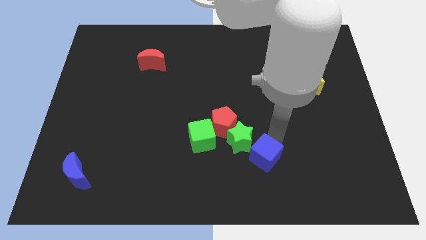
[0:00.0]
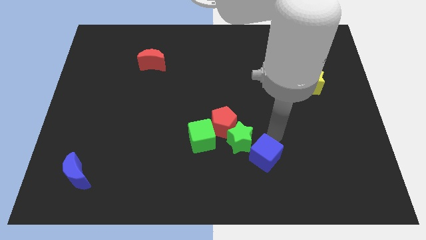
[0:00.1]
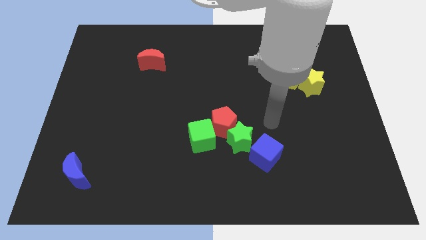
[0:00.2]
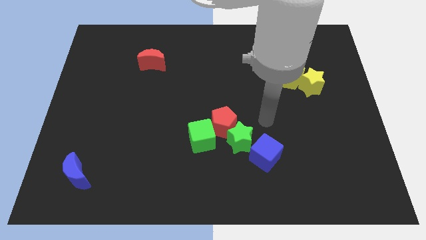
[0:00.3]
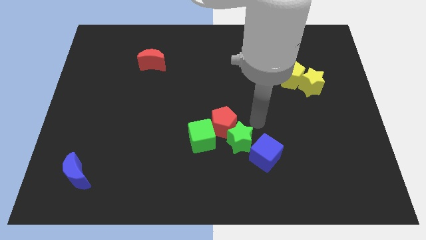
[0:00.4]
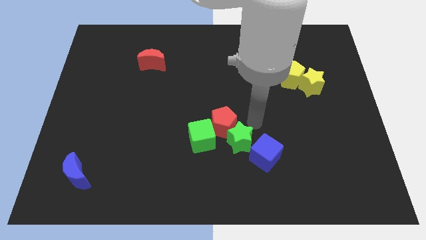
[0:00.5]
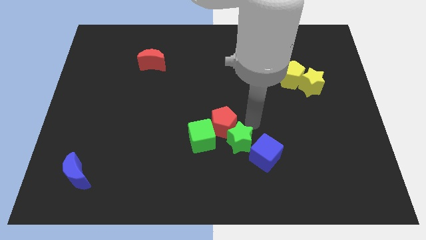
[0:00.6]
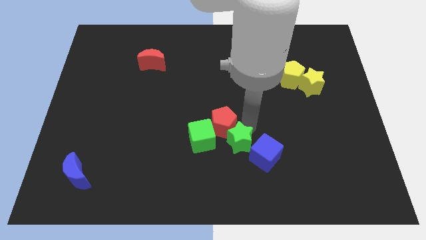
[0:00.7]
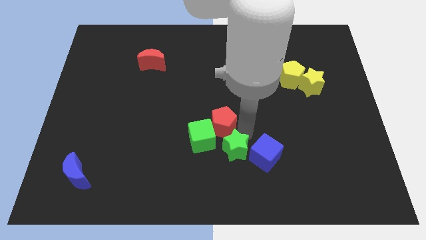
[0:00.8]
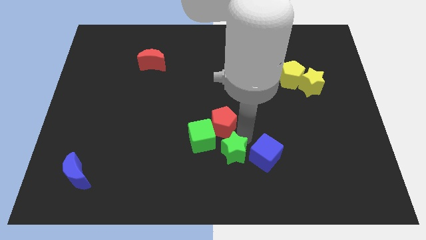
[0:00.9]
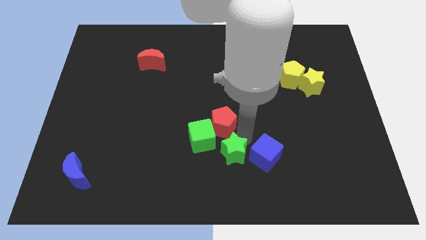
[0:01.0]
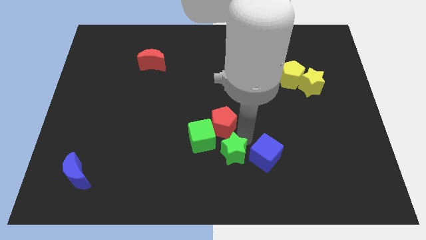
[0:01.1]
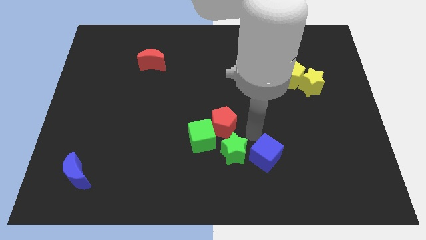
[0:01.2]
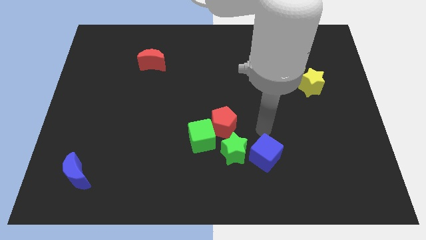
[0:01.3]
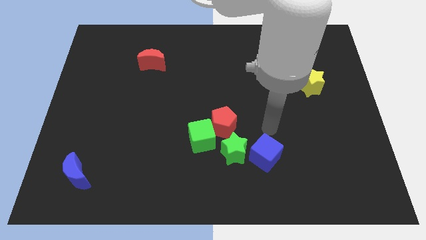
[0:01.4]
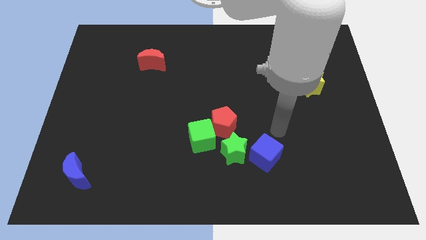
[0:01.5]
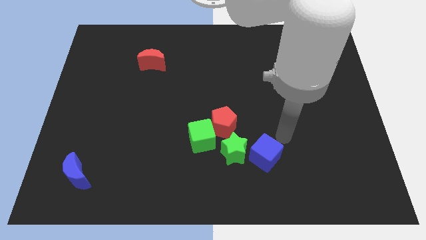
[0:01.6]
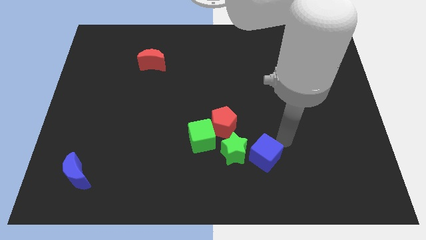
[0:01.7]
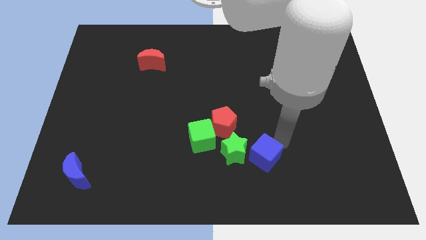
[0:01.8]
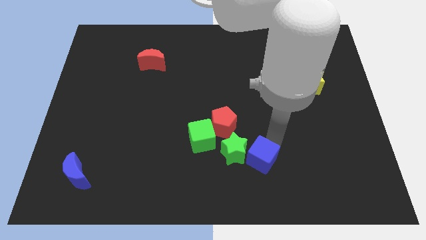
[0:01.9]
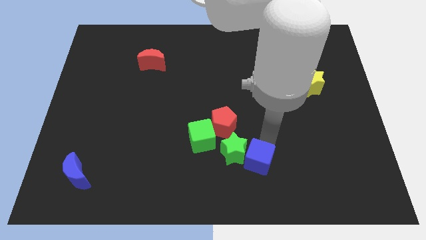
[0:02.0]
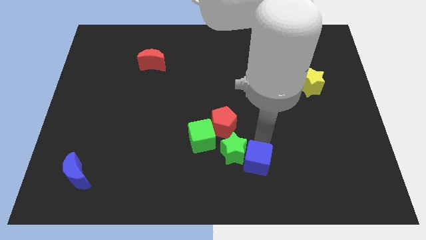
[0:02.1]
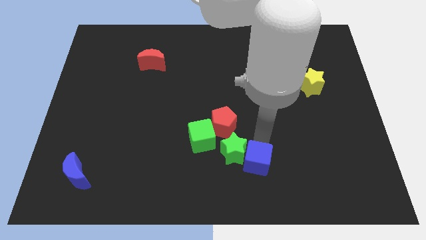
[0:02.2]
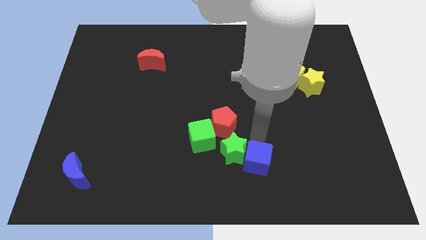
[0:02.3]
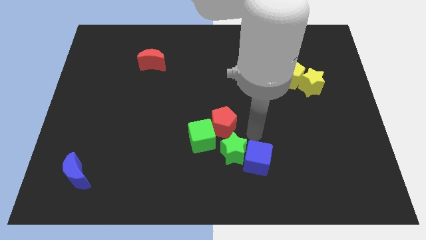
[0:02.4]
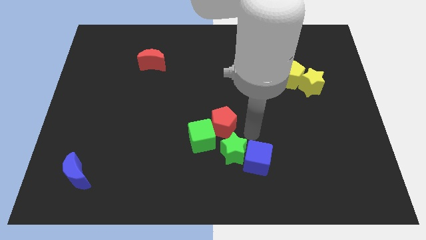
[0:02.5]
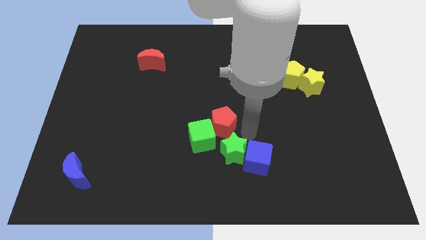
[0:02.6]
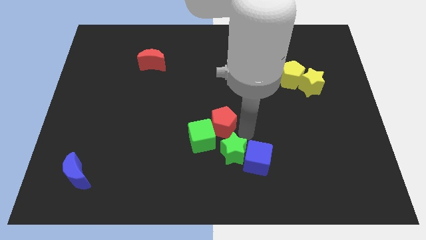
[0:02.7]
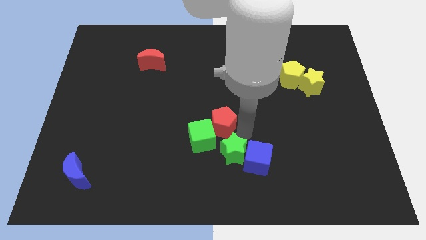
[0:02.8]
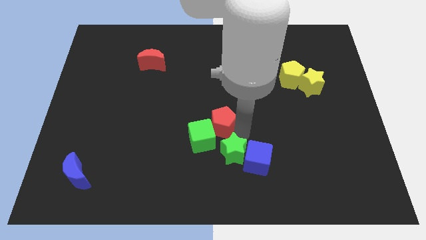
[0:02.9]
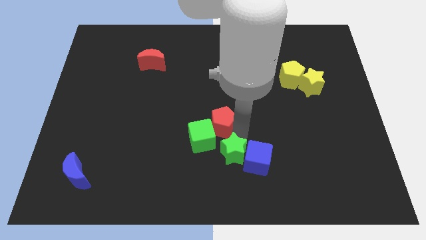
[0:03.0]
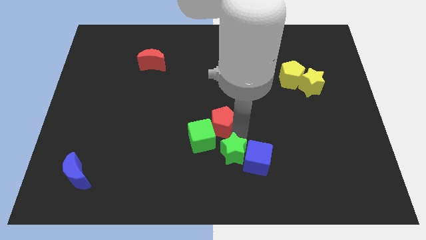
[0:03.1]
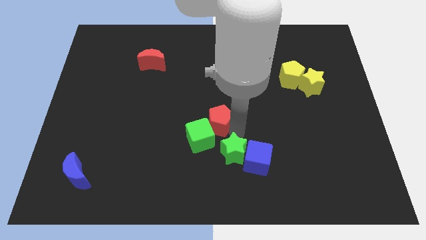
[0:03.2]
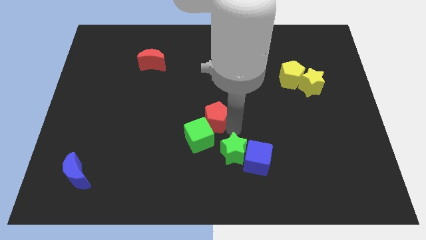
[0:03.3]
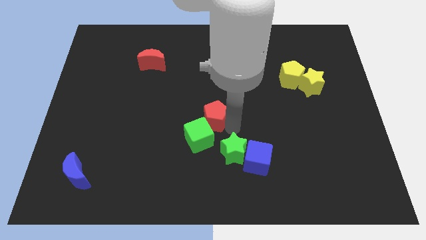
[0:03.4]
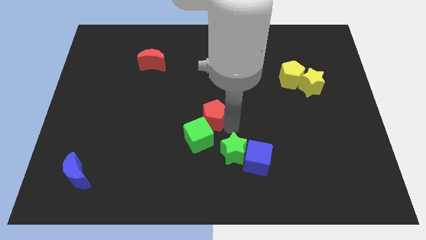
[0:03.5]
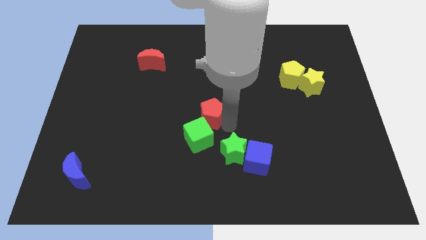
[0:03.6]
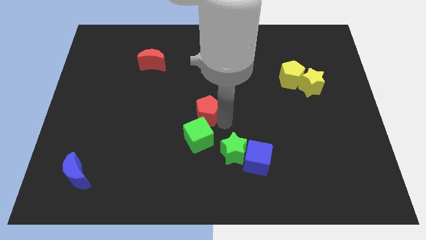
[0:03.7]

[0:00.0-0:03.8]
place the blue cube left to the green star

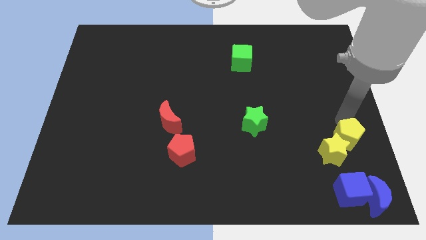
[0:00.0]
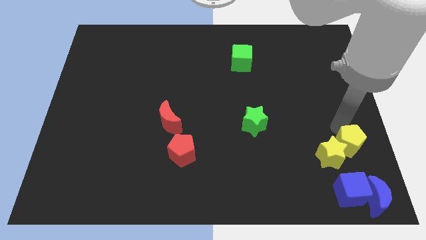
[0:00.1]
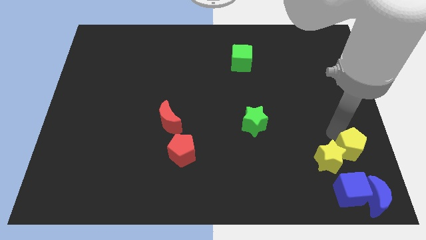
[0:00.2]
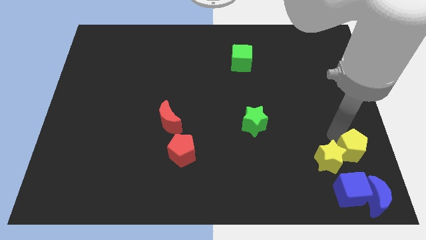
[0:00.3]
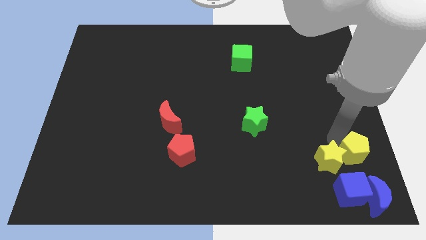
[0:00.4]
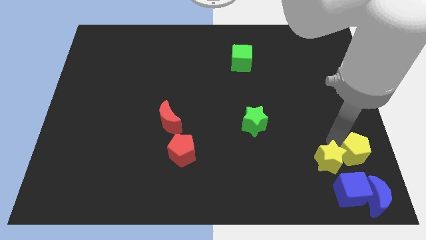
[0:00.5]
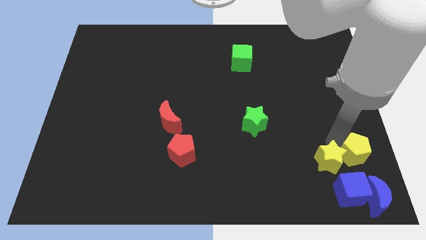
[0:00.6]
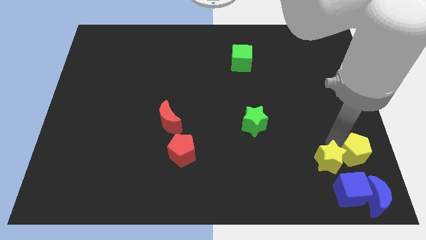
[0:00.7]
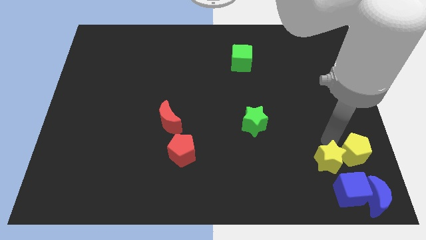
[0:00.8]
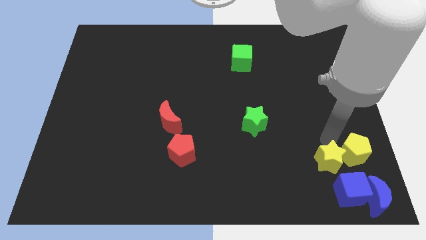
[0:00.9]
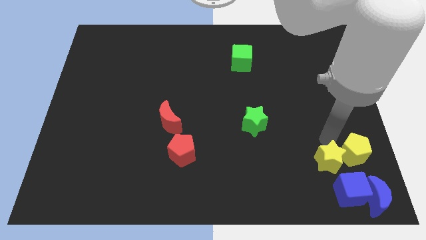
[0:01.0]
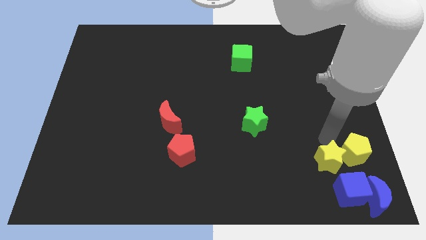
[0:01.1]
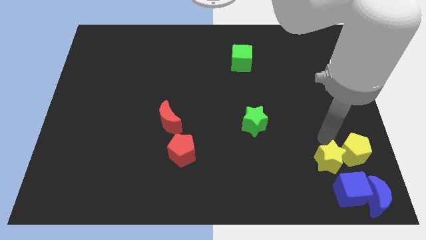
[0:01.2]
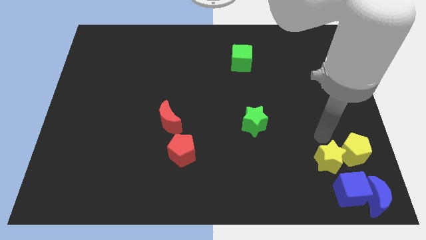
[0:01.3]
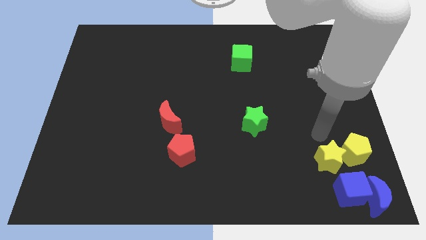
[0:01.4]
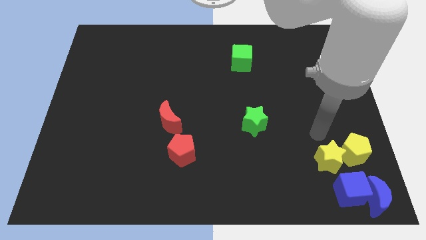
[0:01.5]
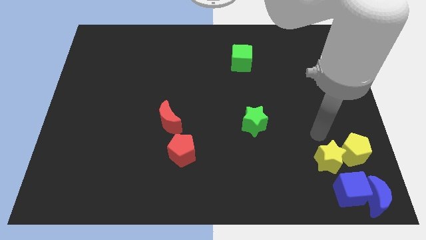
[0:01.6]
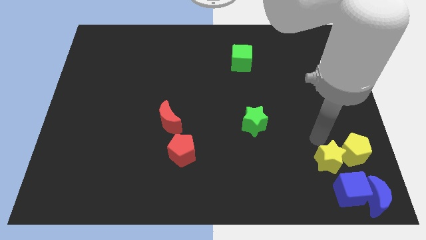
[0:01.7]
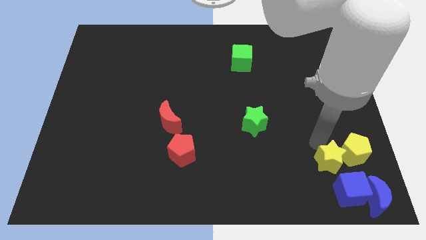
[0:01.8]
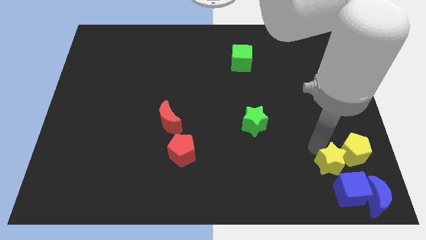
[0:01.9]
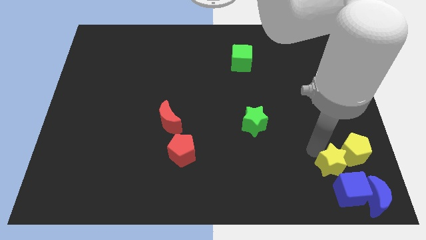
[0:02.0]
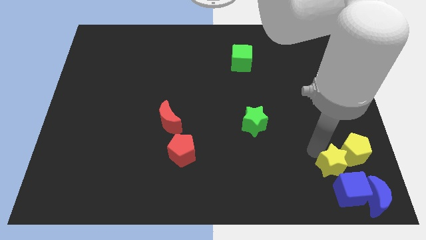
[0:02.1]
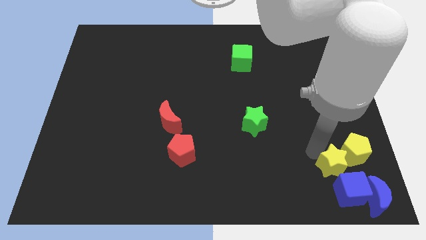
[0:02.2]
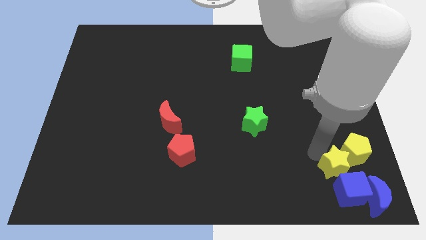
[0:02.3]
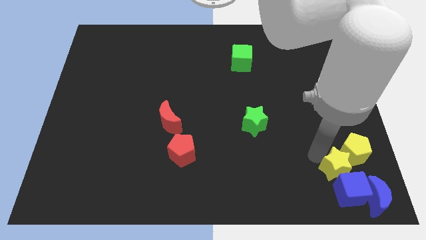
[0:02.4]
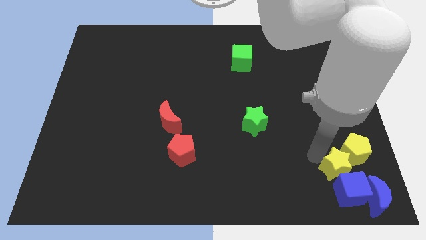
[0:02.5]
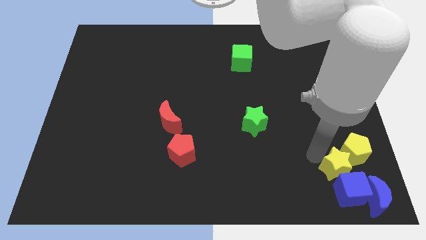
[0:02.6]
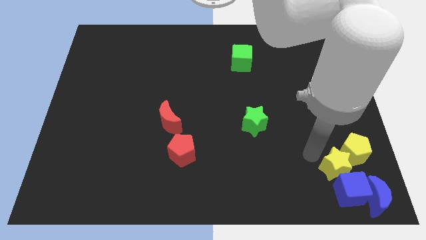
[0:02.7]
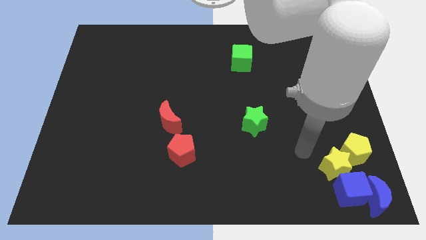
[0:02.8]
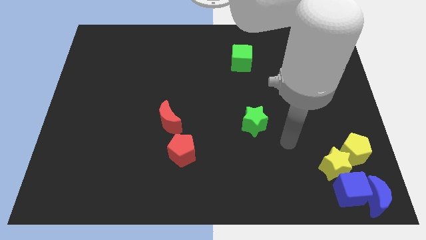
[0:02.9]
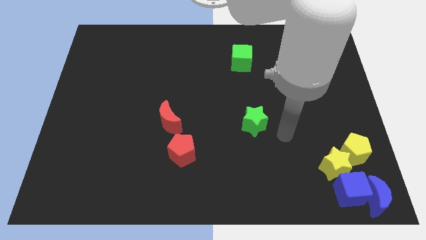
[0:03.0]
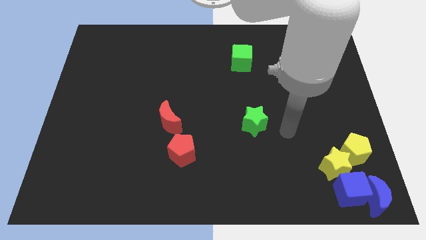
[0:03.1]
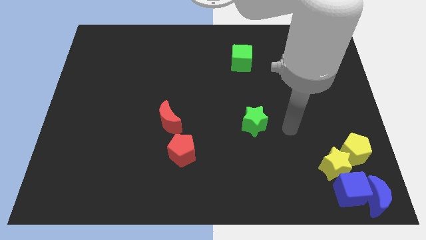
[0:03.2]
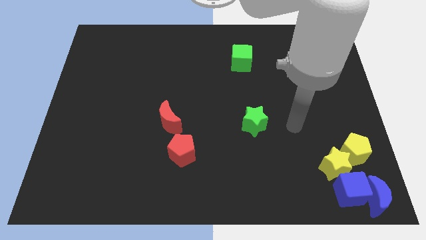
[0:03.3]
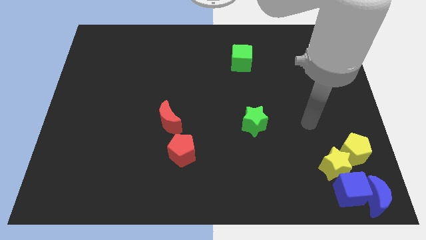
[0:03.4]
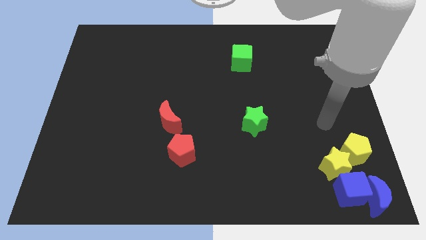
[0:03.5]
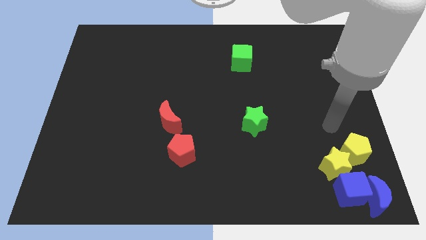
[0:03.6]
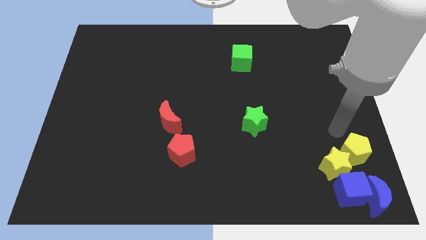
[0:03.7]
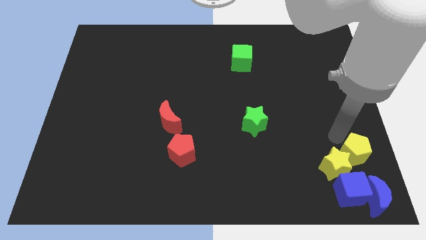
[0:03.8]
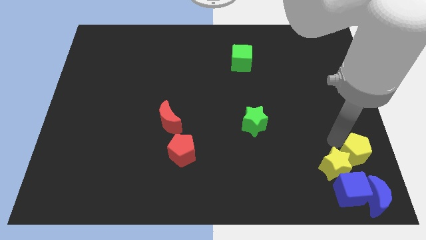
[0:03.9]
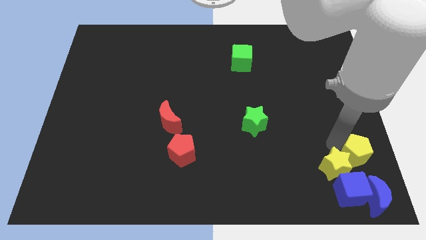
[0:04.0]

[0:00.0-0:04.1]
push the yellow star into the blue cube

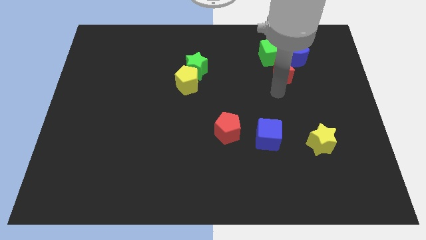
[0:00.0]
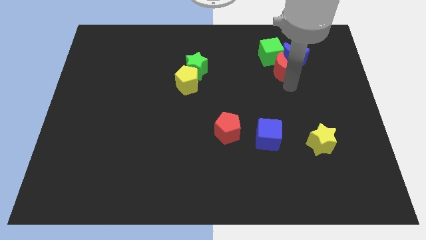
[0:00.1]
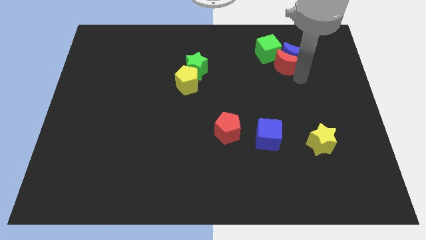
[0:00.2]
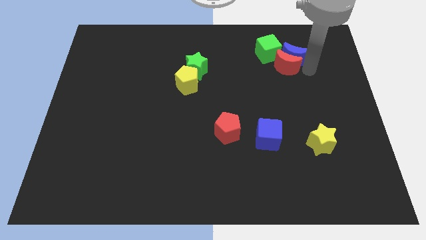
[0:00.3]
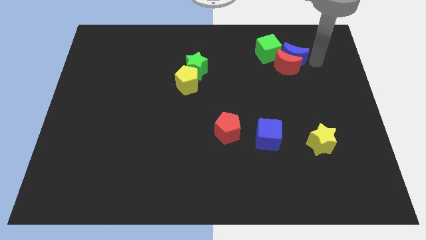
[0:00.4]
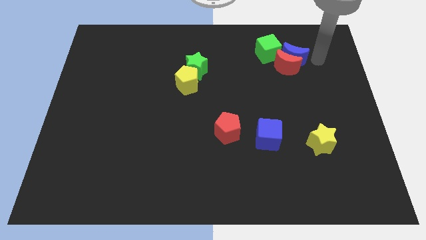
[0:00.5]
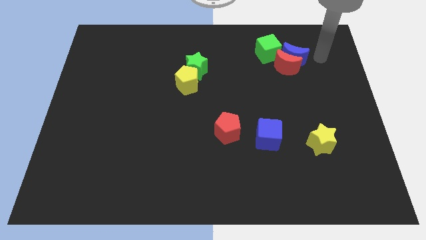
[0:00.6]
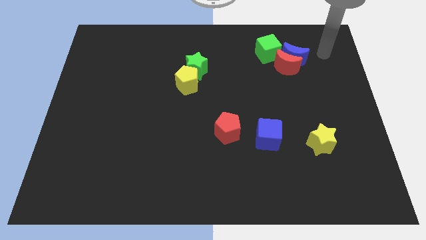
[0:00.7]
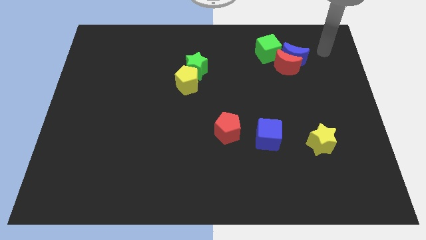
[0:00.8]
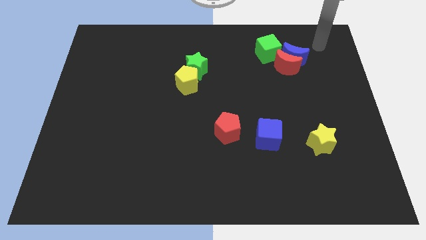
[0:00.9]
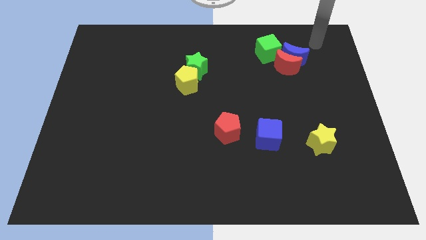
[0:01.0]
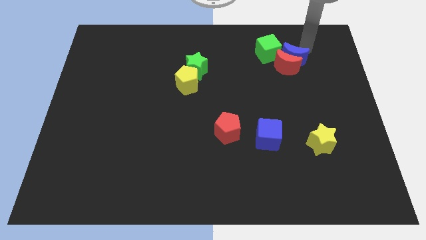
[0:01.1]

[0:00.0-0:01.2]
move red crescent close to blue crescent
